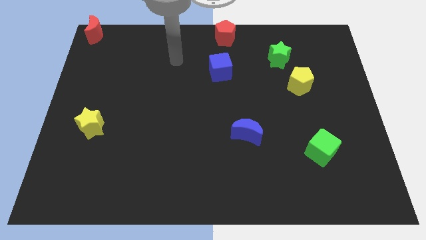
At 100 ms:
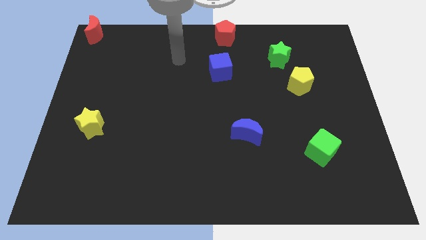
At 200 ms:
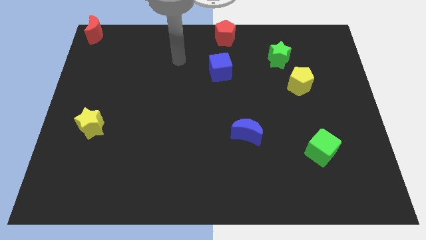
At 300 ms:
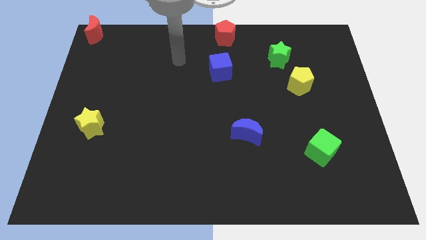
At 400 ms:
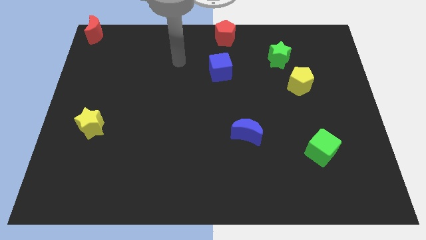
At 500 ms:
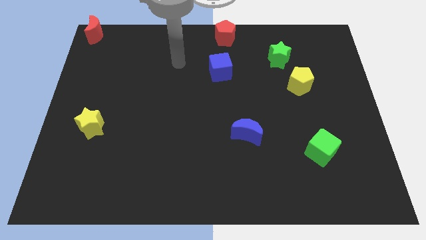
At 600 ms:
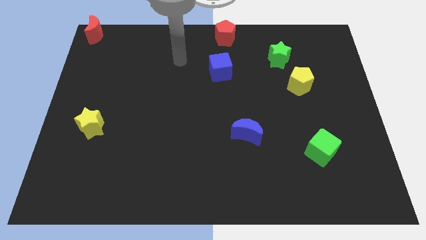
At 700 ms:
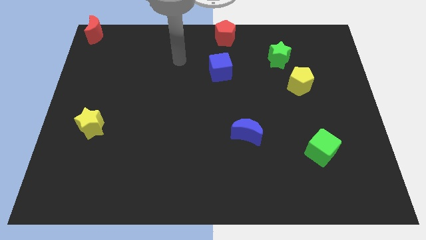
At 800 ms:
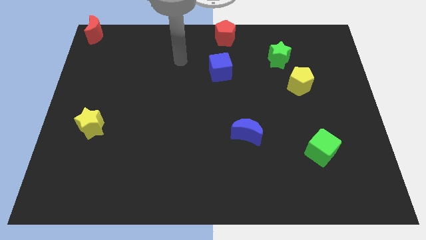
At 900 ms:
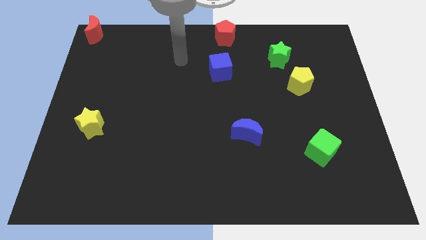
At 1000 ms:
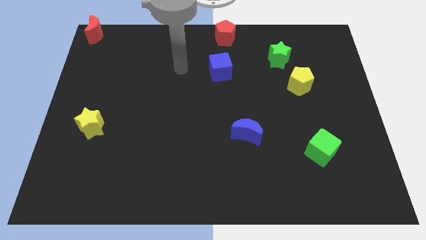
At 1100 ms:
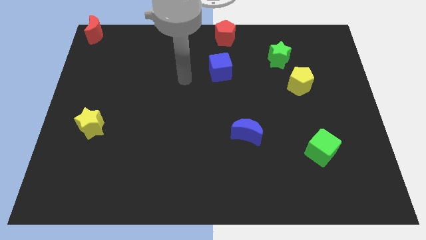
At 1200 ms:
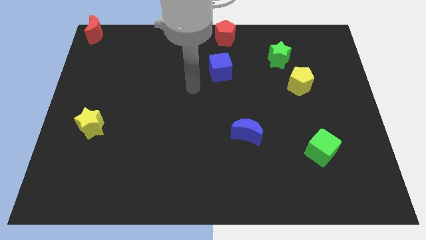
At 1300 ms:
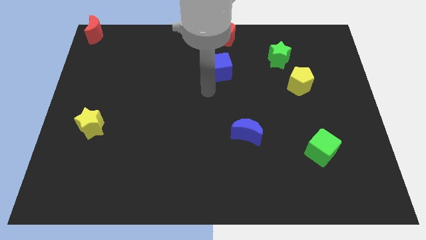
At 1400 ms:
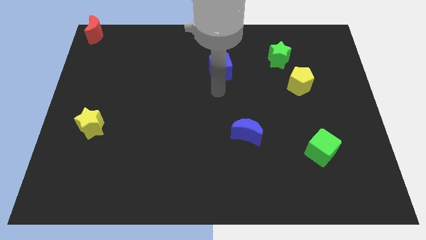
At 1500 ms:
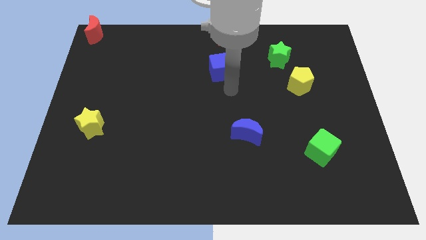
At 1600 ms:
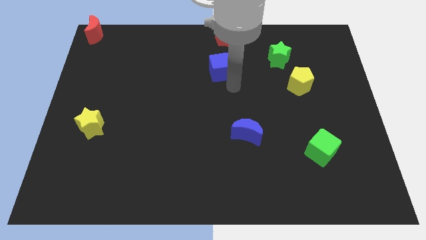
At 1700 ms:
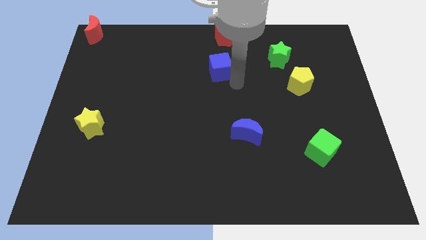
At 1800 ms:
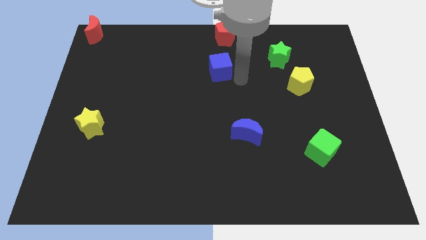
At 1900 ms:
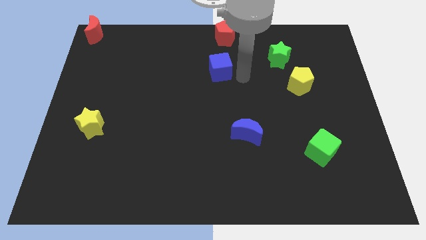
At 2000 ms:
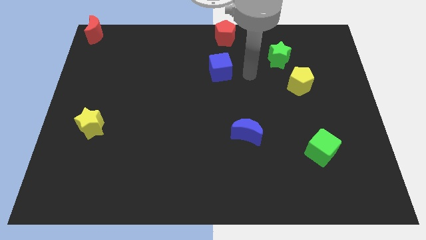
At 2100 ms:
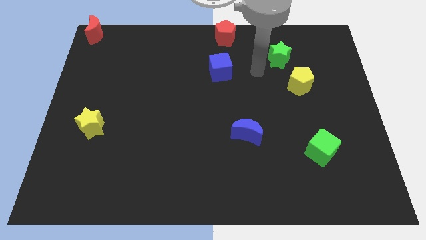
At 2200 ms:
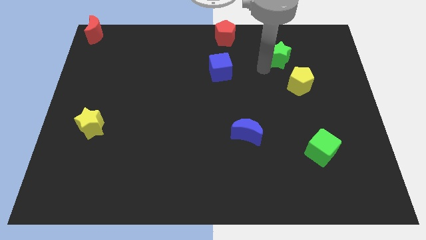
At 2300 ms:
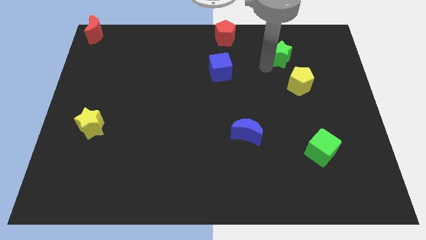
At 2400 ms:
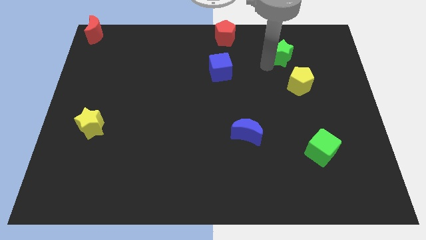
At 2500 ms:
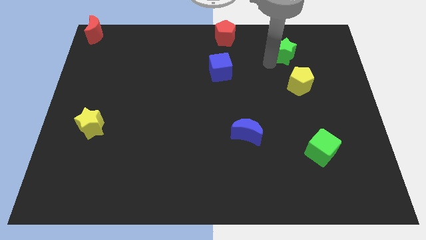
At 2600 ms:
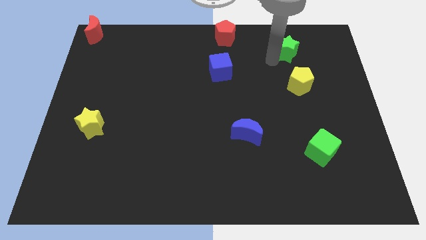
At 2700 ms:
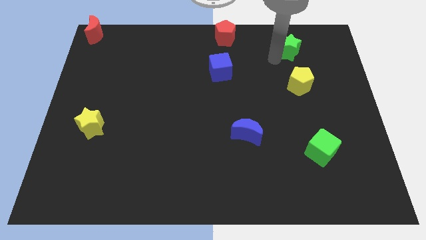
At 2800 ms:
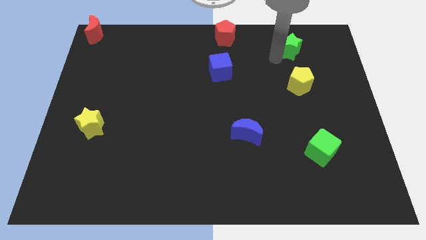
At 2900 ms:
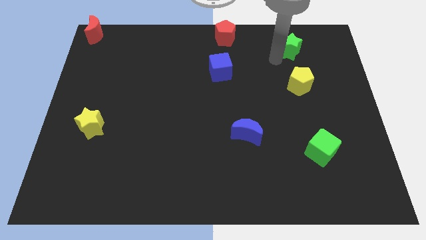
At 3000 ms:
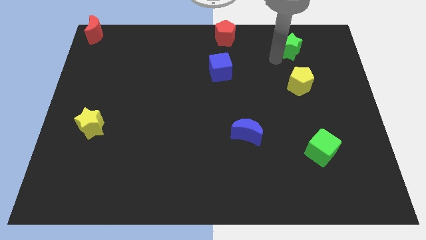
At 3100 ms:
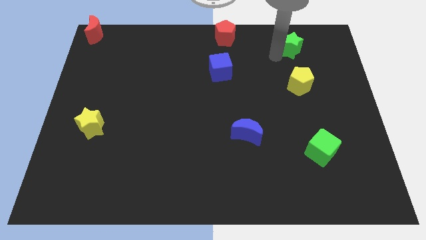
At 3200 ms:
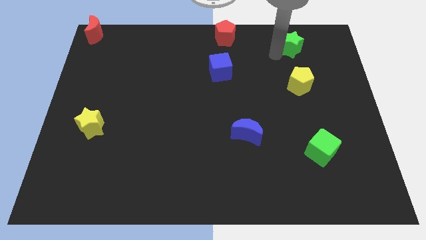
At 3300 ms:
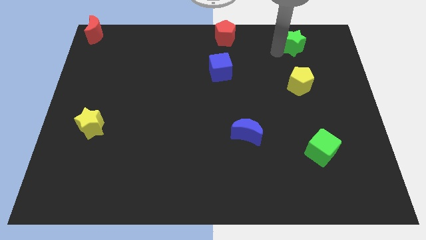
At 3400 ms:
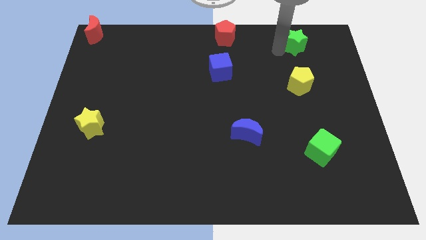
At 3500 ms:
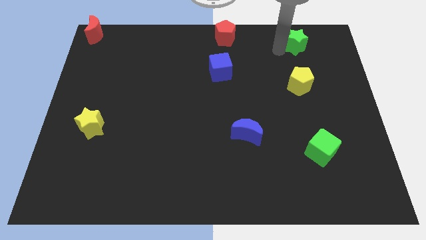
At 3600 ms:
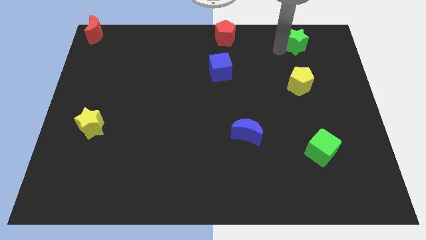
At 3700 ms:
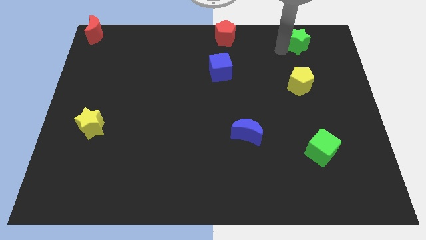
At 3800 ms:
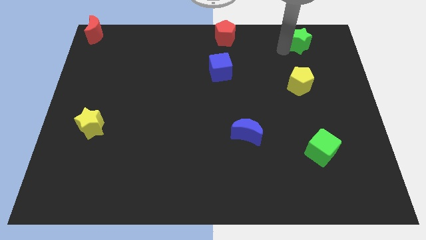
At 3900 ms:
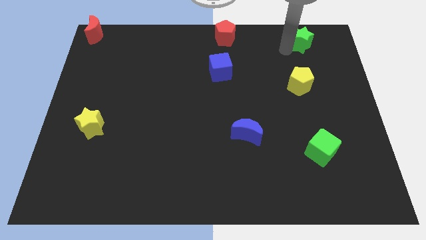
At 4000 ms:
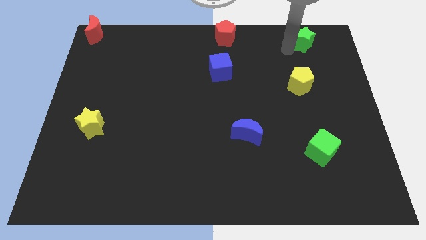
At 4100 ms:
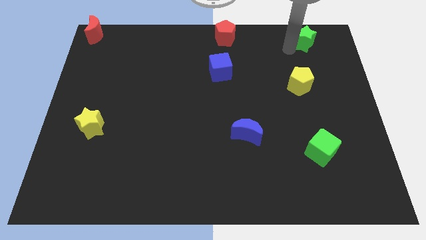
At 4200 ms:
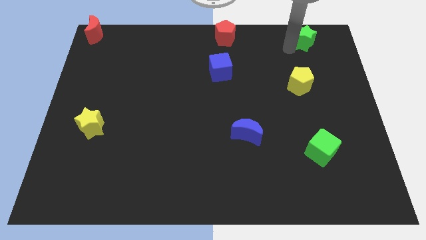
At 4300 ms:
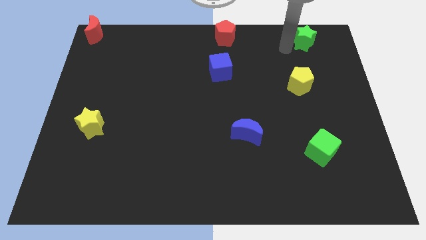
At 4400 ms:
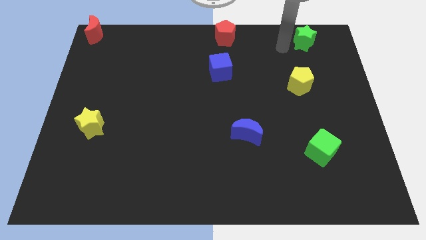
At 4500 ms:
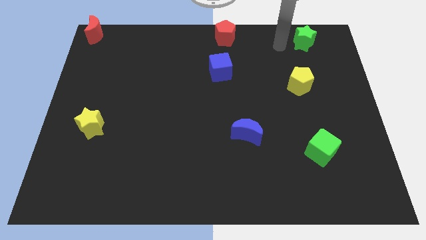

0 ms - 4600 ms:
move the green star to the top right side of the board

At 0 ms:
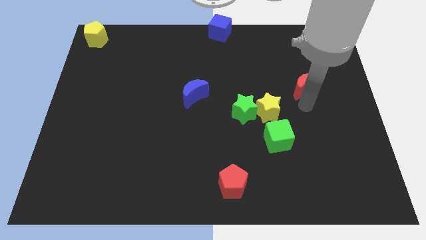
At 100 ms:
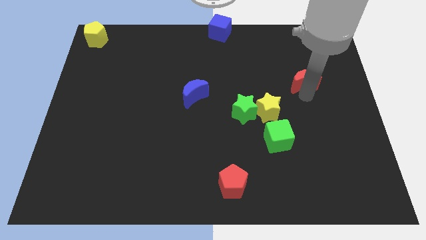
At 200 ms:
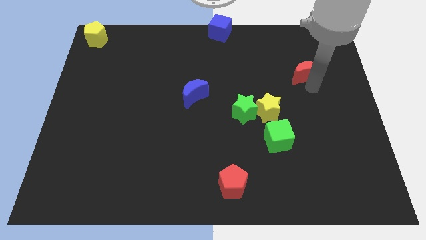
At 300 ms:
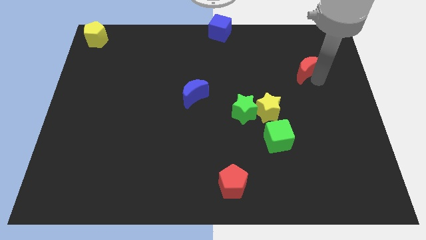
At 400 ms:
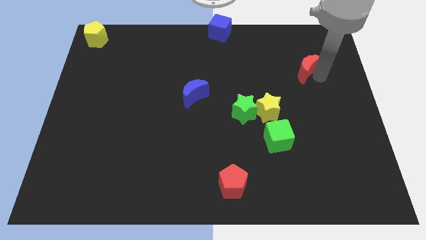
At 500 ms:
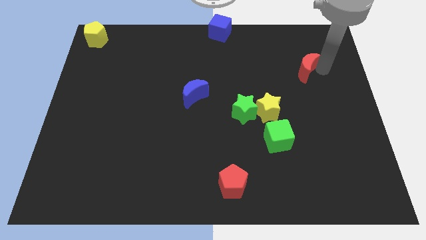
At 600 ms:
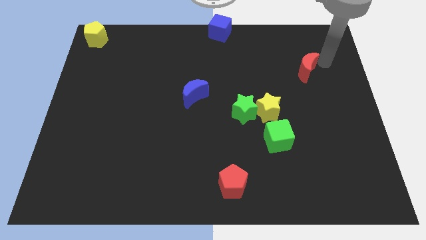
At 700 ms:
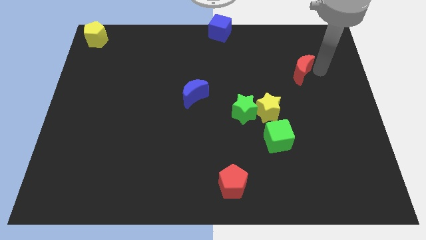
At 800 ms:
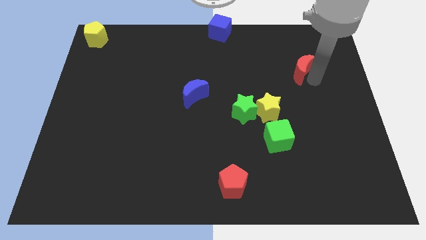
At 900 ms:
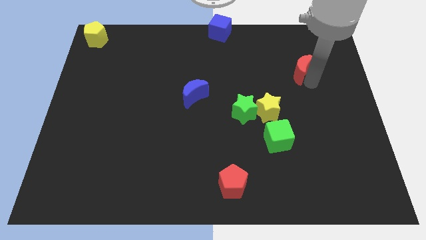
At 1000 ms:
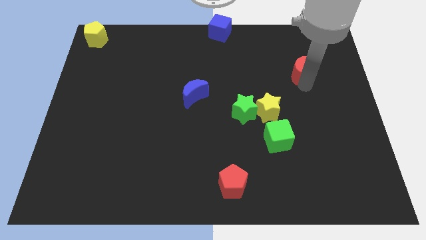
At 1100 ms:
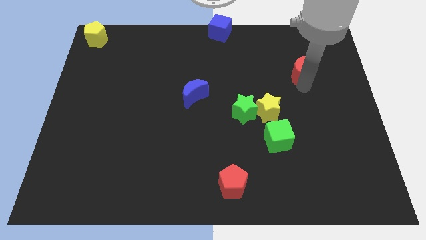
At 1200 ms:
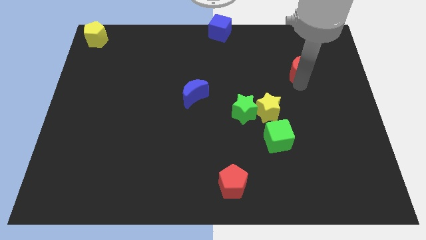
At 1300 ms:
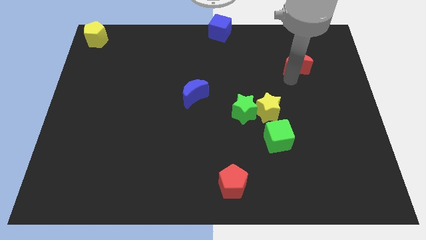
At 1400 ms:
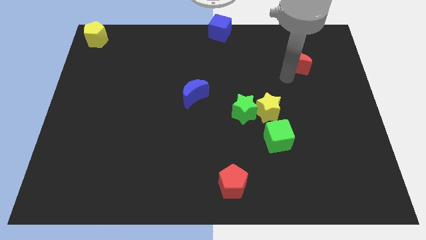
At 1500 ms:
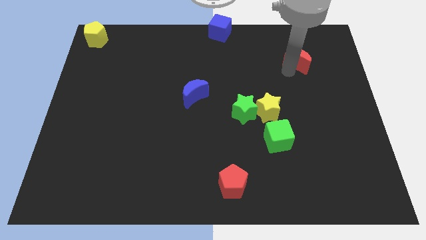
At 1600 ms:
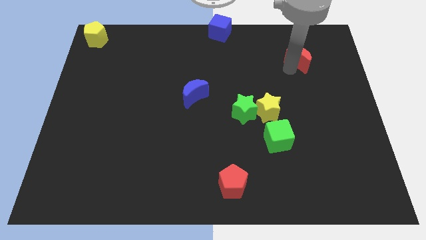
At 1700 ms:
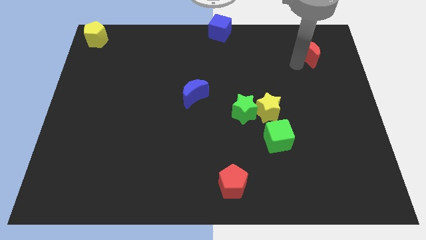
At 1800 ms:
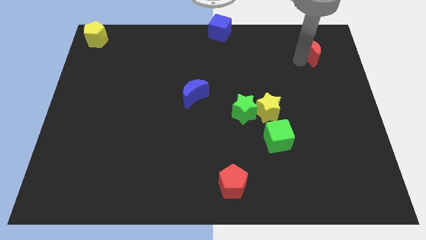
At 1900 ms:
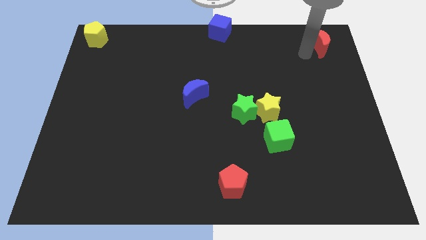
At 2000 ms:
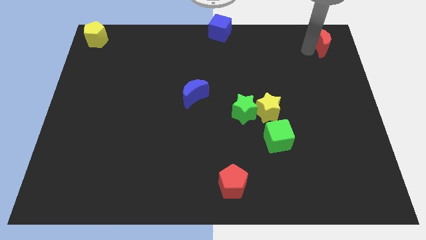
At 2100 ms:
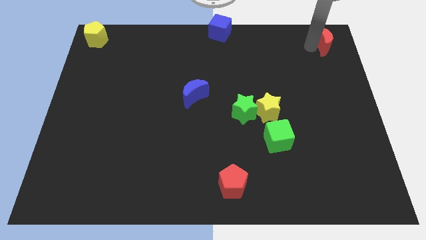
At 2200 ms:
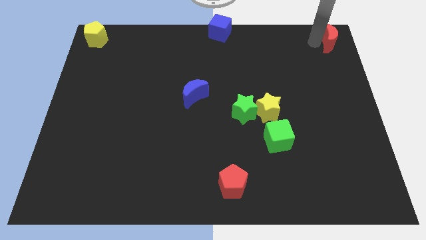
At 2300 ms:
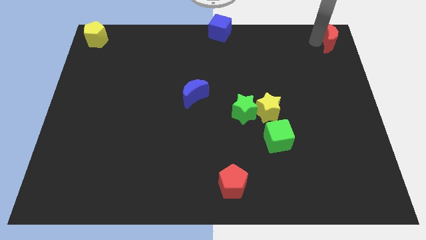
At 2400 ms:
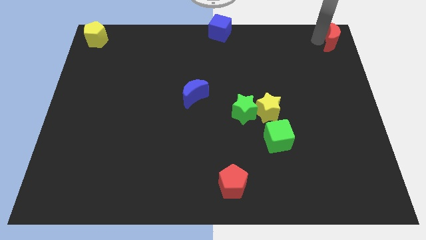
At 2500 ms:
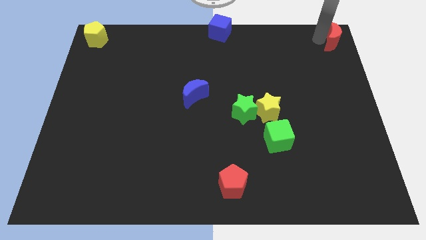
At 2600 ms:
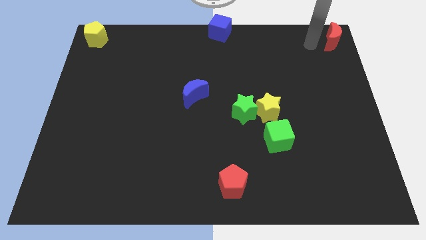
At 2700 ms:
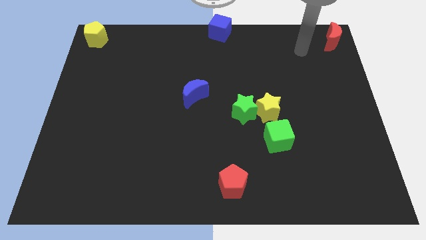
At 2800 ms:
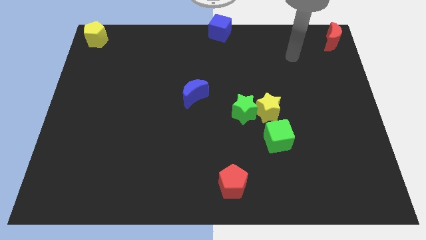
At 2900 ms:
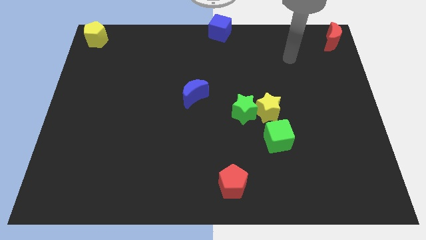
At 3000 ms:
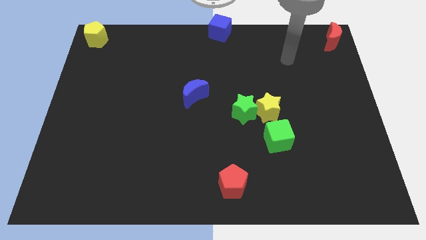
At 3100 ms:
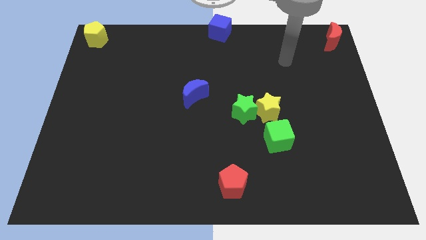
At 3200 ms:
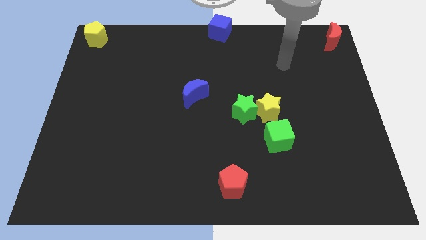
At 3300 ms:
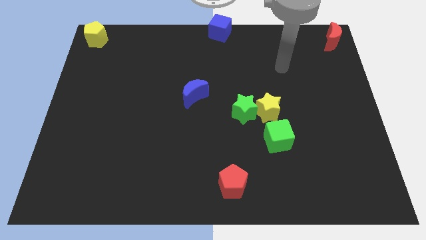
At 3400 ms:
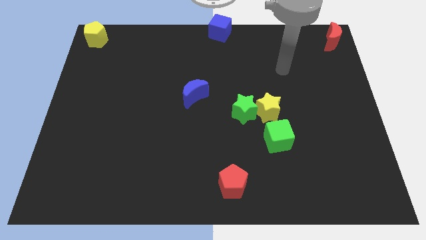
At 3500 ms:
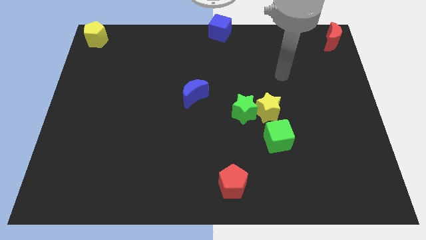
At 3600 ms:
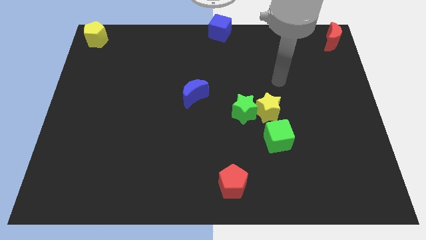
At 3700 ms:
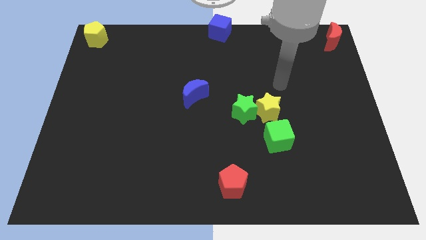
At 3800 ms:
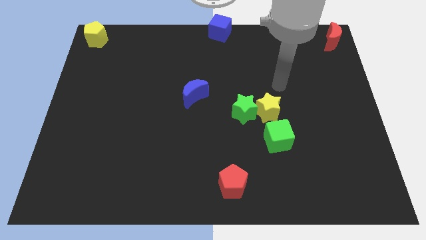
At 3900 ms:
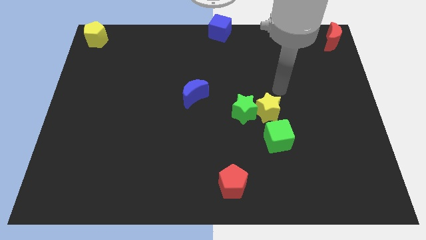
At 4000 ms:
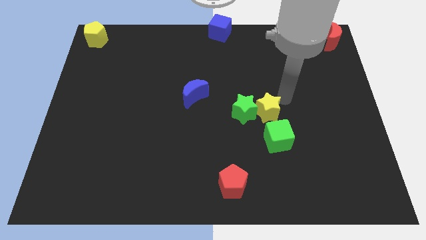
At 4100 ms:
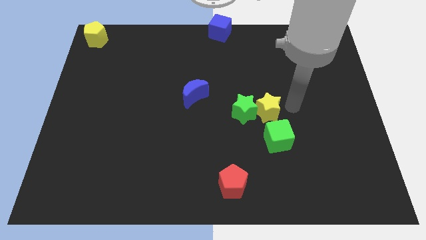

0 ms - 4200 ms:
push the red crescent to the top right corner of the board

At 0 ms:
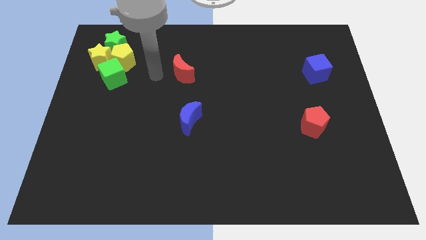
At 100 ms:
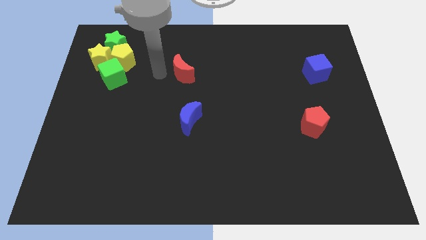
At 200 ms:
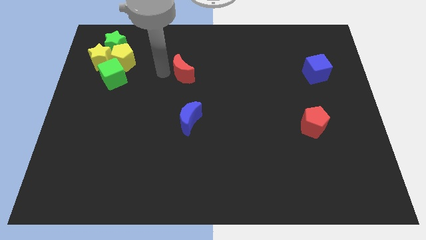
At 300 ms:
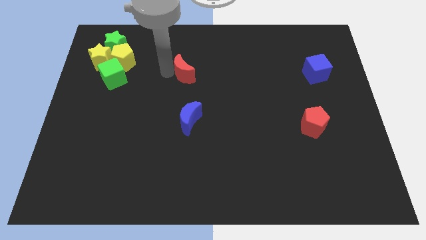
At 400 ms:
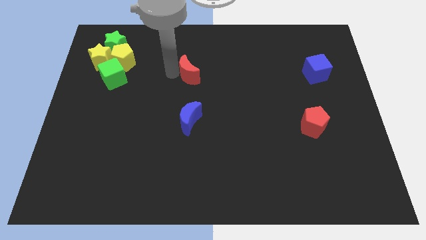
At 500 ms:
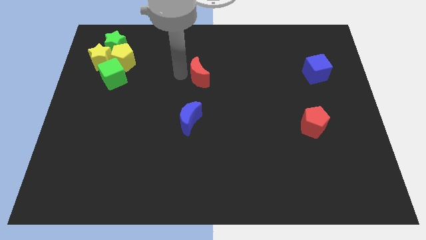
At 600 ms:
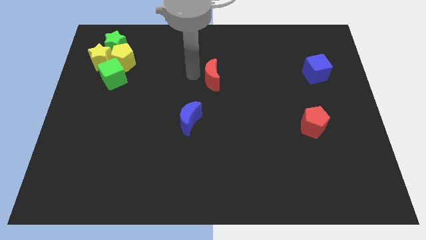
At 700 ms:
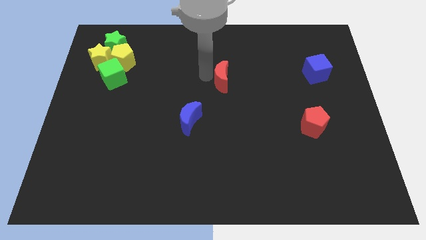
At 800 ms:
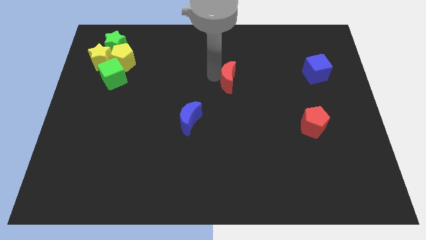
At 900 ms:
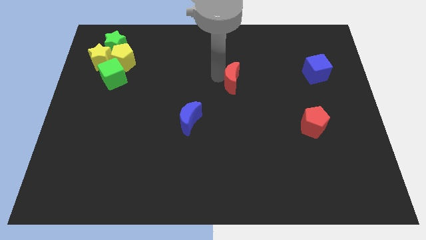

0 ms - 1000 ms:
push the red crescent slightly to the right
